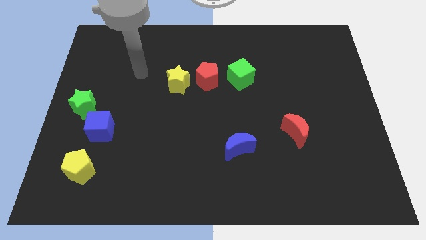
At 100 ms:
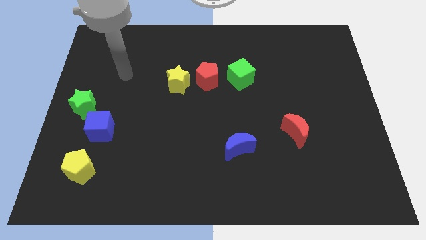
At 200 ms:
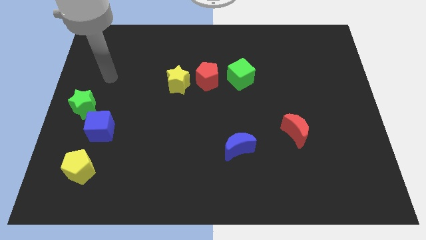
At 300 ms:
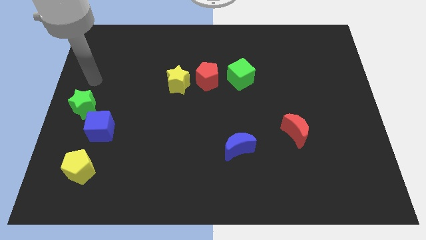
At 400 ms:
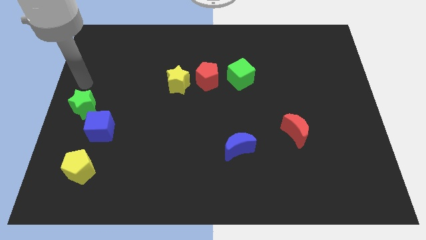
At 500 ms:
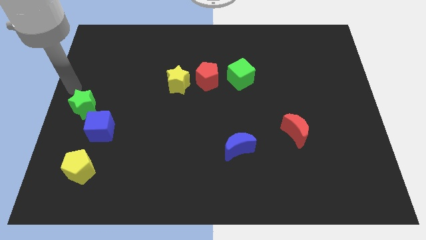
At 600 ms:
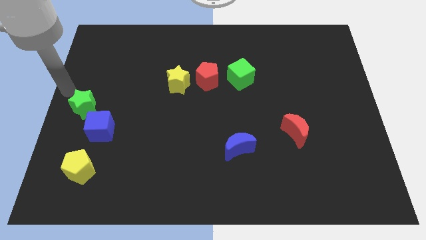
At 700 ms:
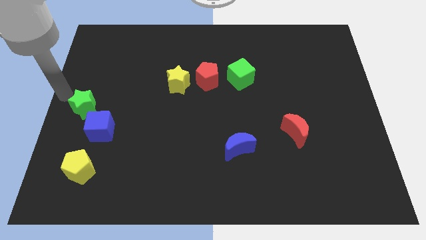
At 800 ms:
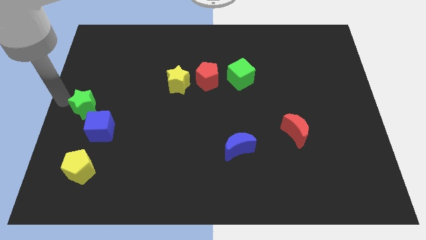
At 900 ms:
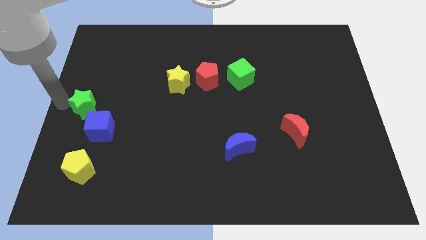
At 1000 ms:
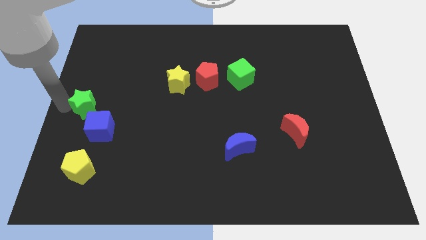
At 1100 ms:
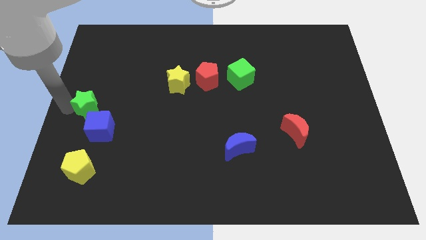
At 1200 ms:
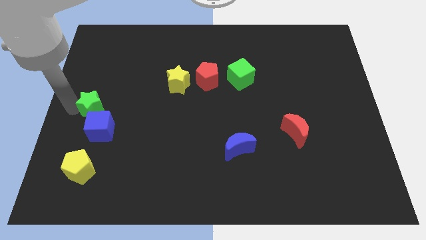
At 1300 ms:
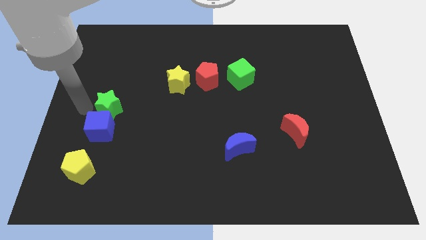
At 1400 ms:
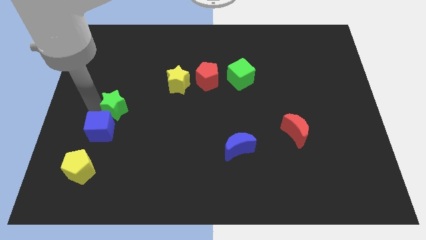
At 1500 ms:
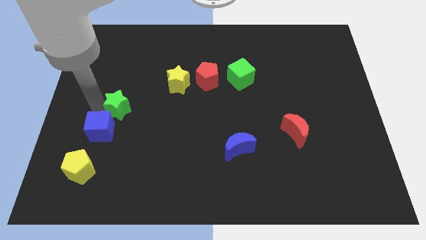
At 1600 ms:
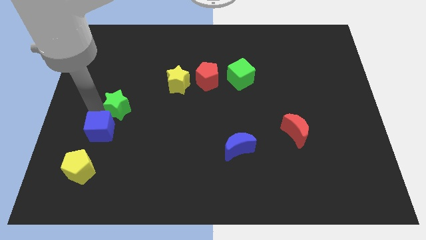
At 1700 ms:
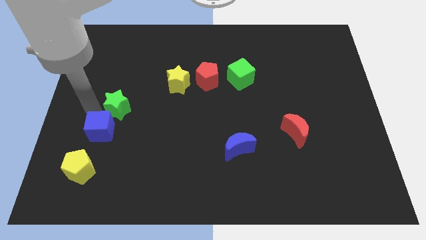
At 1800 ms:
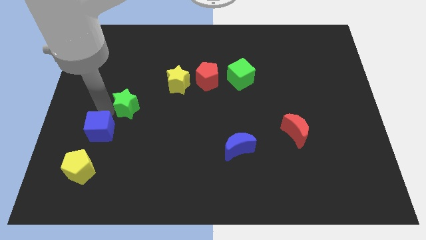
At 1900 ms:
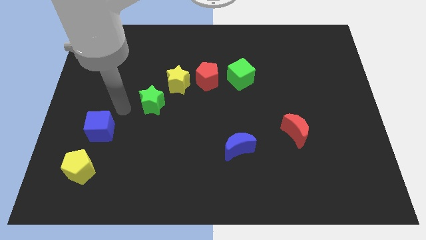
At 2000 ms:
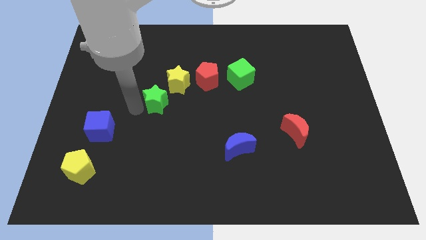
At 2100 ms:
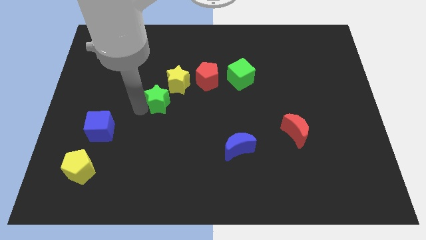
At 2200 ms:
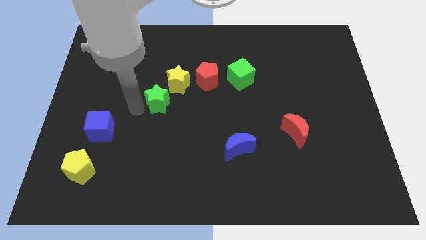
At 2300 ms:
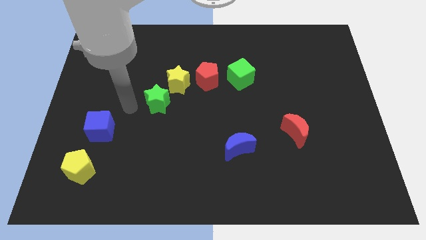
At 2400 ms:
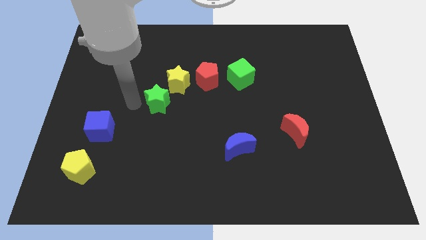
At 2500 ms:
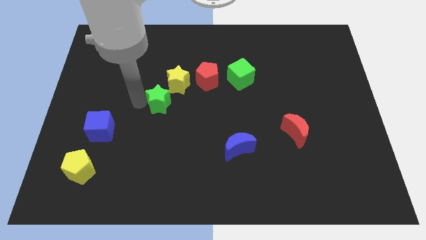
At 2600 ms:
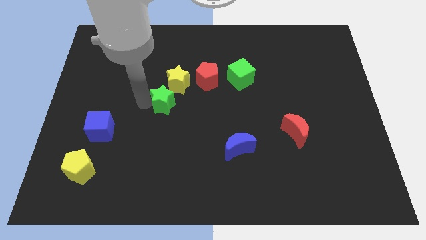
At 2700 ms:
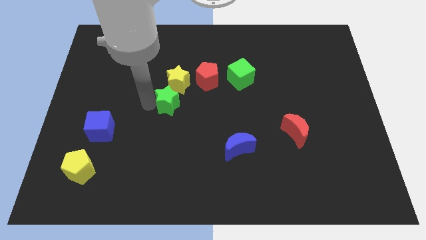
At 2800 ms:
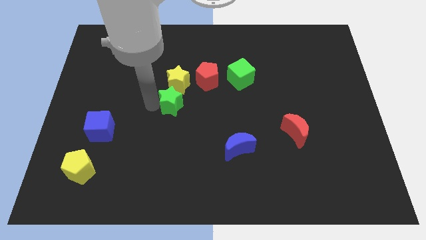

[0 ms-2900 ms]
move the green star to the bottom left of the yellow star

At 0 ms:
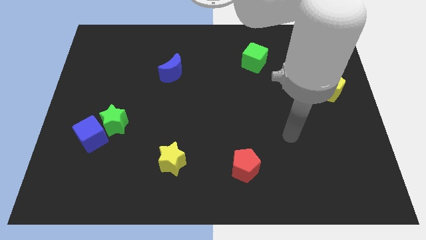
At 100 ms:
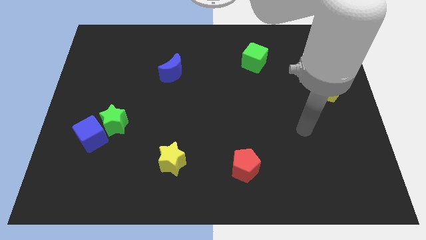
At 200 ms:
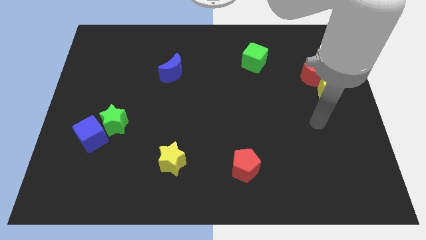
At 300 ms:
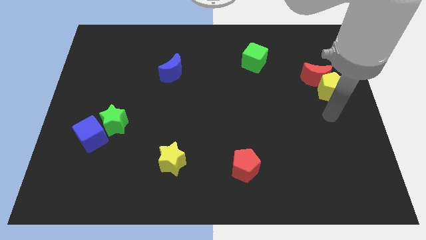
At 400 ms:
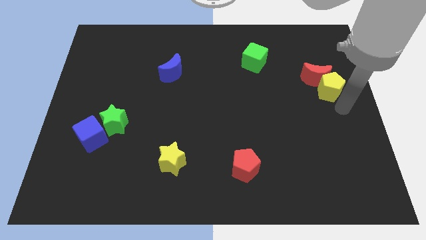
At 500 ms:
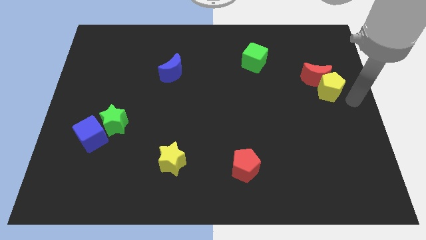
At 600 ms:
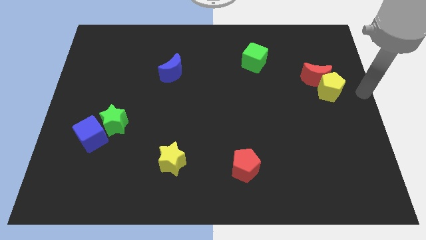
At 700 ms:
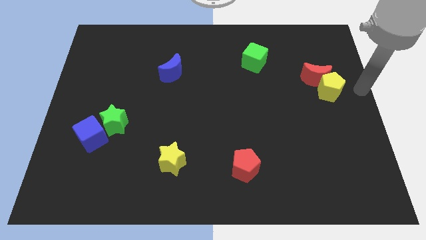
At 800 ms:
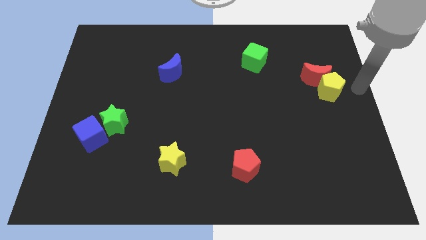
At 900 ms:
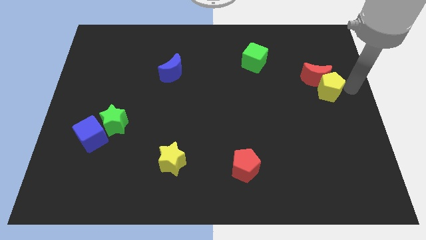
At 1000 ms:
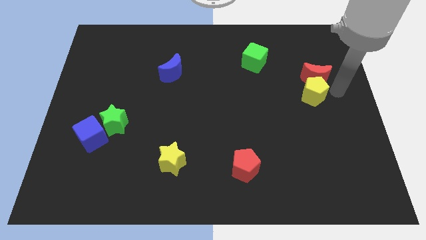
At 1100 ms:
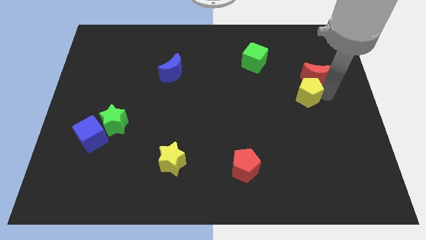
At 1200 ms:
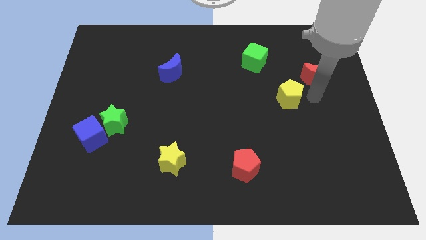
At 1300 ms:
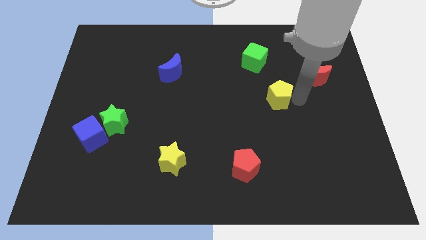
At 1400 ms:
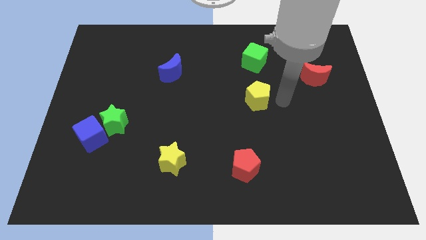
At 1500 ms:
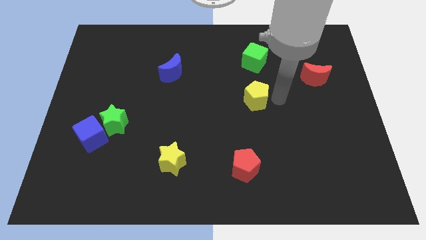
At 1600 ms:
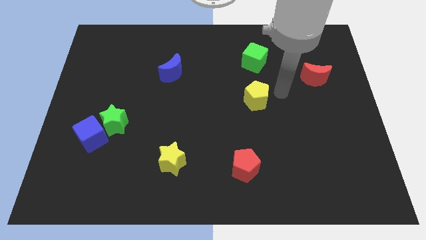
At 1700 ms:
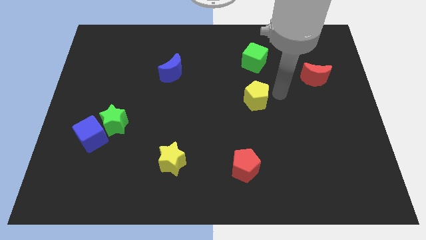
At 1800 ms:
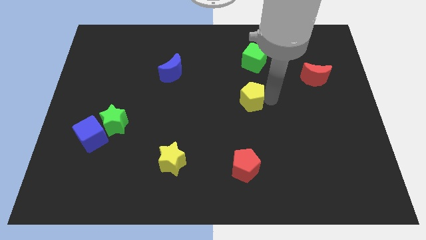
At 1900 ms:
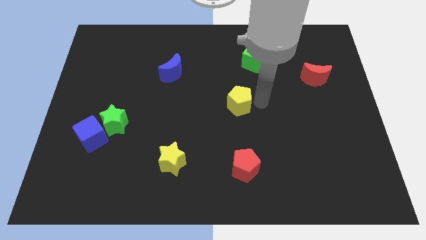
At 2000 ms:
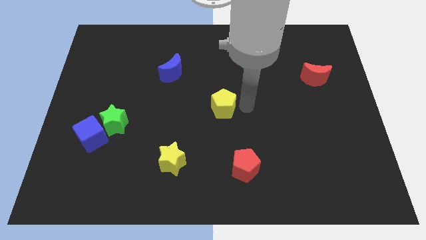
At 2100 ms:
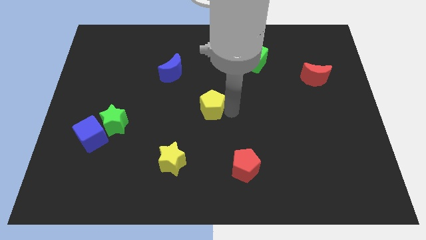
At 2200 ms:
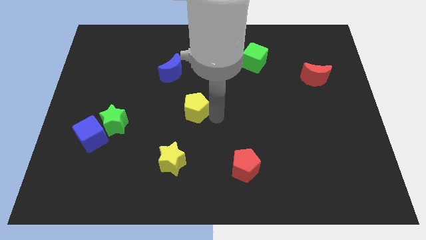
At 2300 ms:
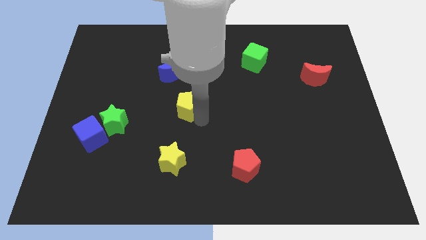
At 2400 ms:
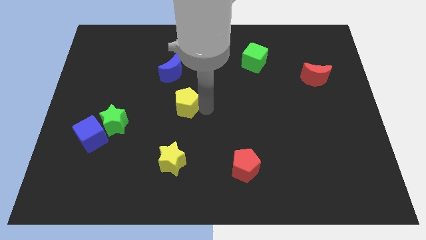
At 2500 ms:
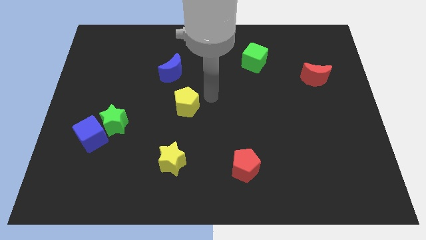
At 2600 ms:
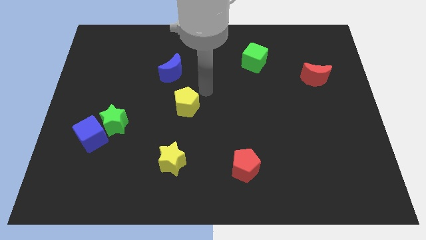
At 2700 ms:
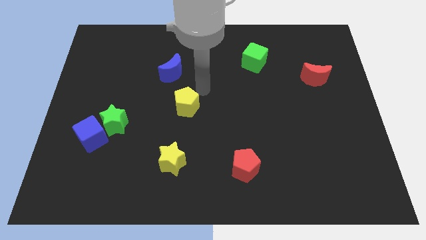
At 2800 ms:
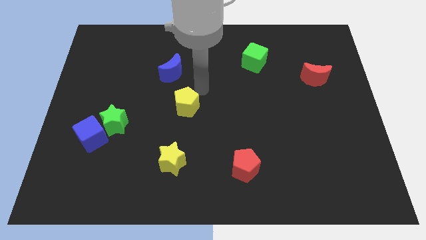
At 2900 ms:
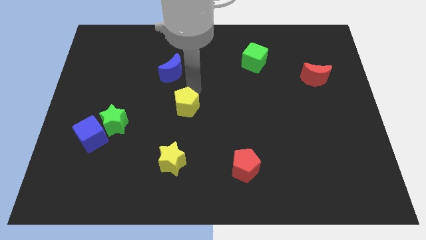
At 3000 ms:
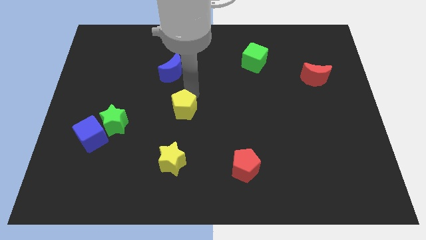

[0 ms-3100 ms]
place the yellow pentagon above the green star

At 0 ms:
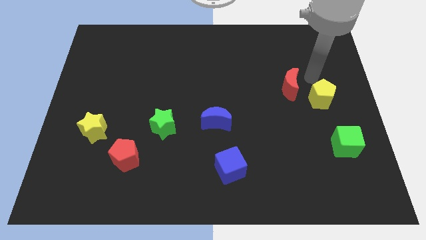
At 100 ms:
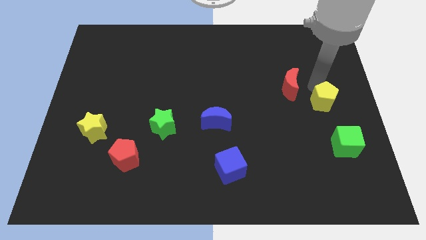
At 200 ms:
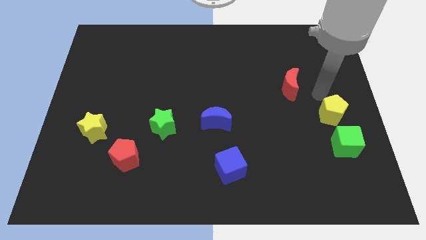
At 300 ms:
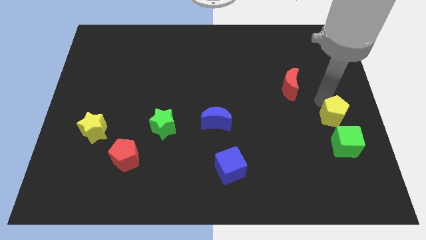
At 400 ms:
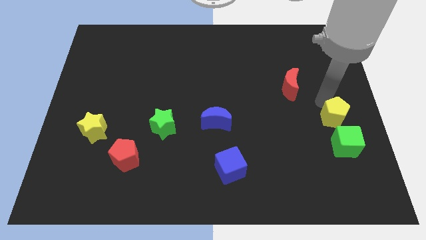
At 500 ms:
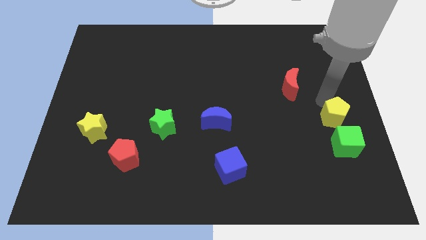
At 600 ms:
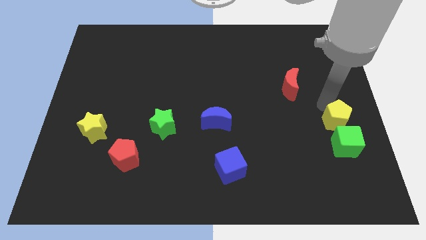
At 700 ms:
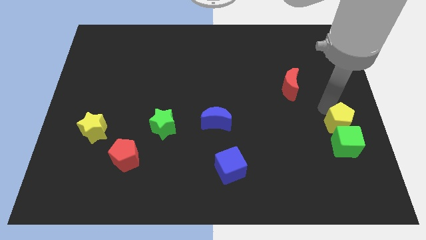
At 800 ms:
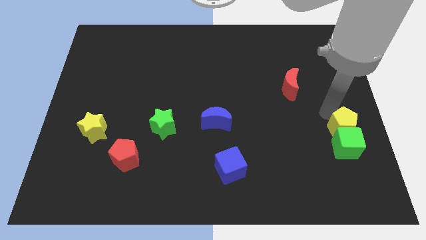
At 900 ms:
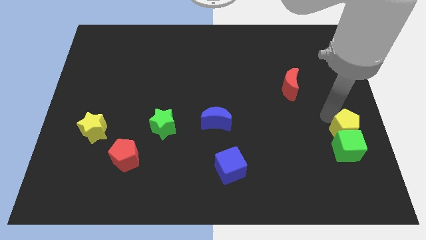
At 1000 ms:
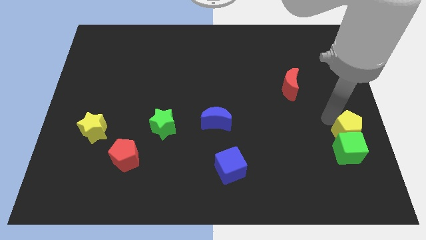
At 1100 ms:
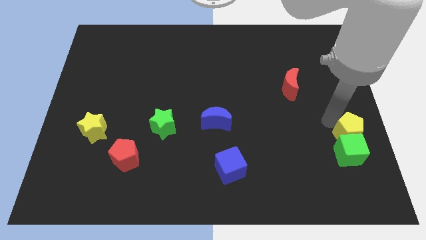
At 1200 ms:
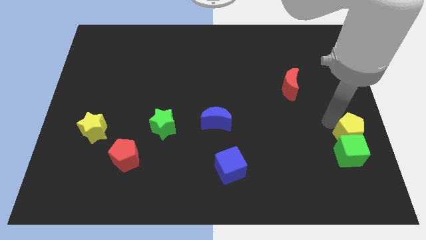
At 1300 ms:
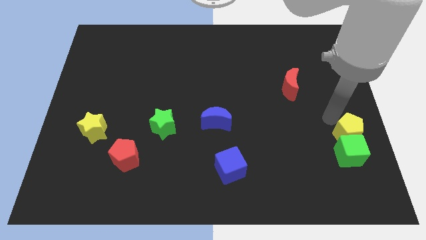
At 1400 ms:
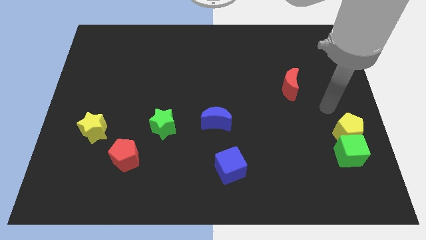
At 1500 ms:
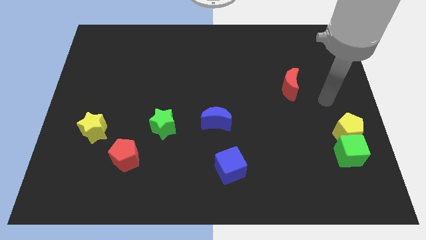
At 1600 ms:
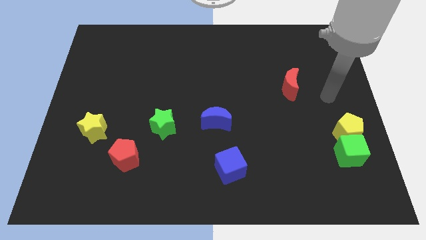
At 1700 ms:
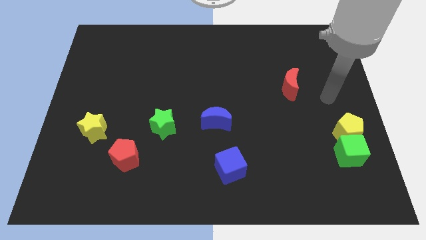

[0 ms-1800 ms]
push the yellow pentagon into the green cube

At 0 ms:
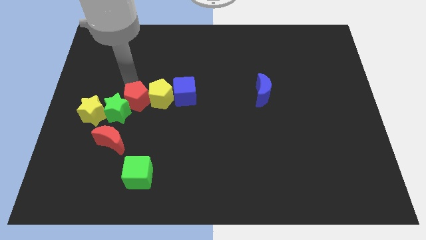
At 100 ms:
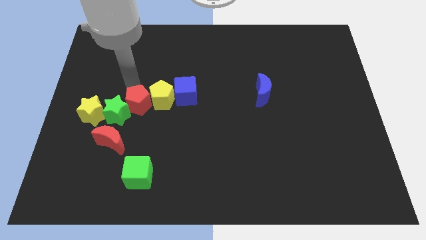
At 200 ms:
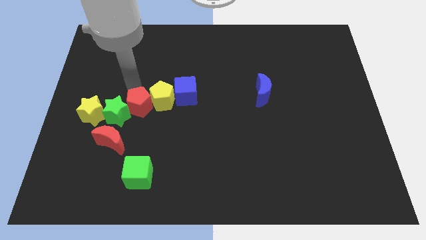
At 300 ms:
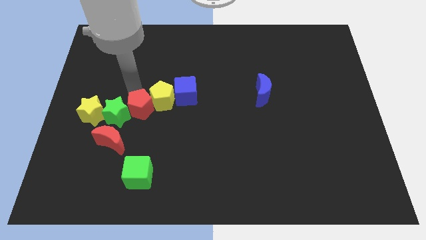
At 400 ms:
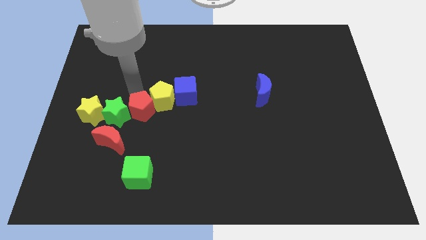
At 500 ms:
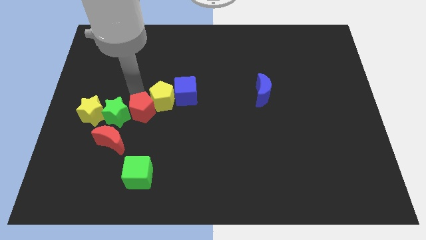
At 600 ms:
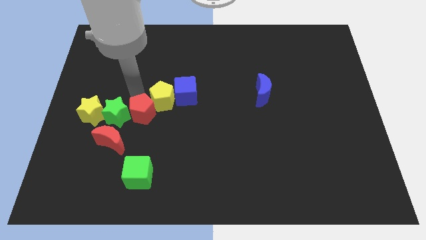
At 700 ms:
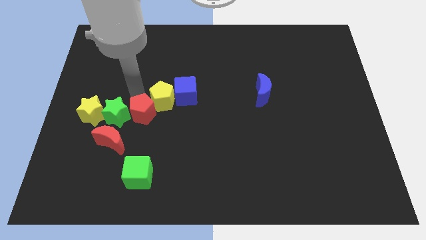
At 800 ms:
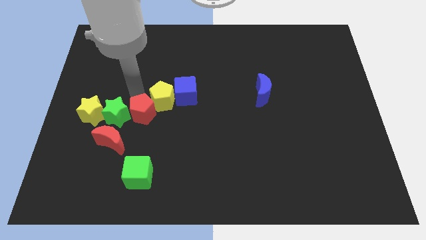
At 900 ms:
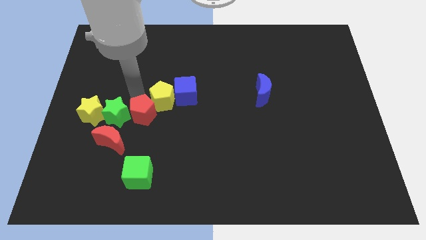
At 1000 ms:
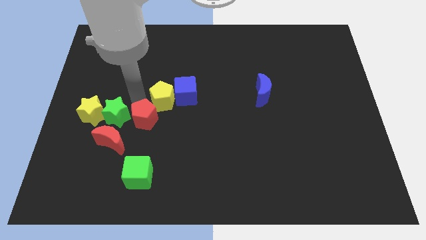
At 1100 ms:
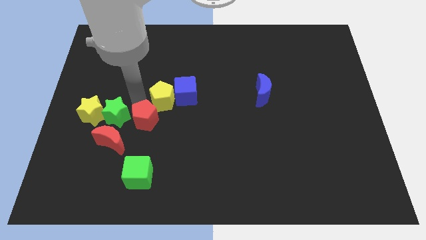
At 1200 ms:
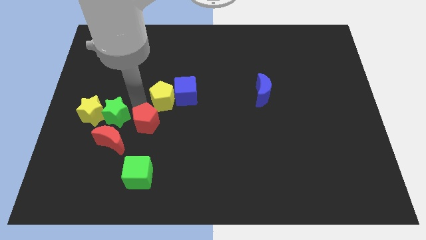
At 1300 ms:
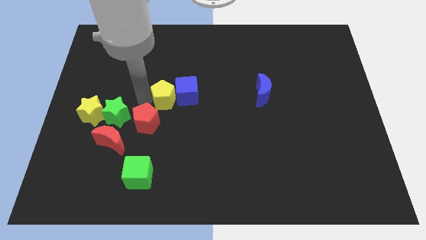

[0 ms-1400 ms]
separate red pentagon from green star yellow pentagon
